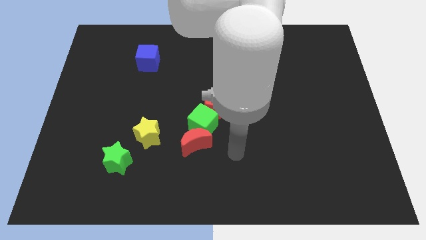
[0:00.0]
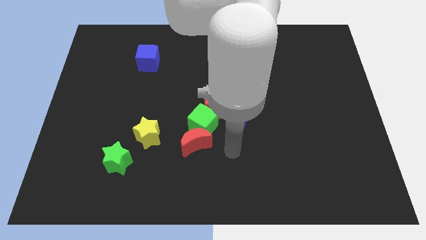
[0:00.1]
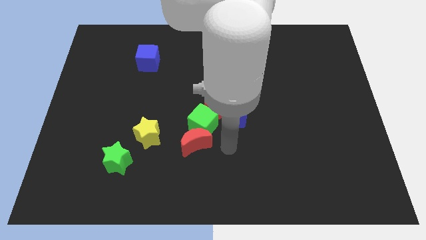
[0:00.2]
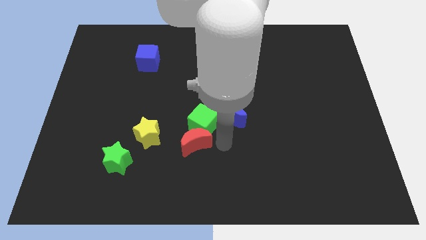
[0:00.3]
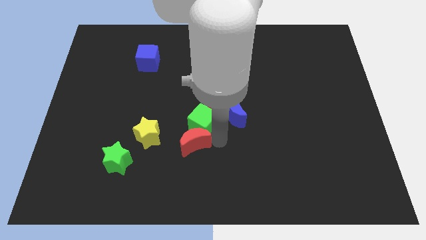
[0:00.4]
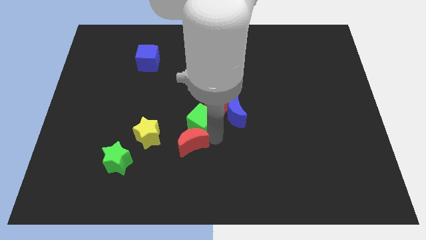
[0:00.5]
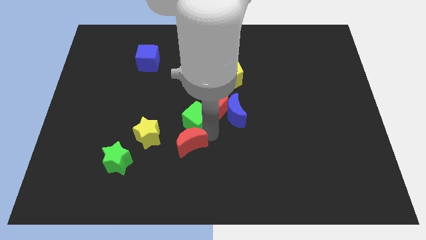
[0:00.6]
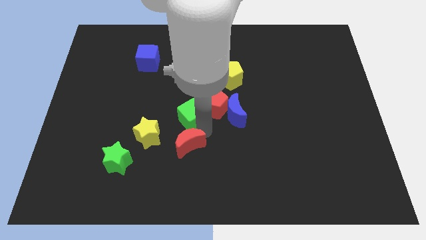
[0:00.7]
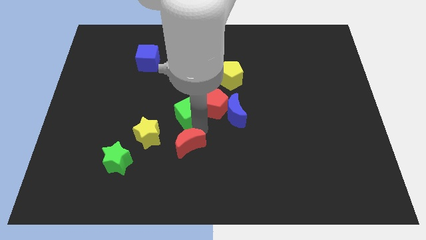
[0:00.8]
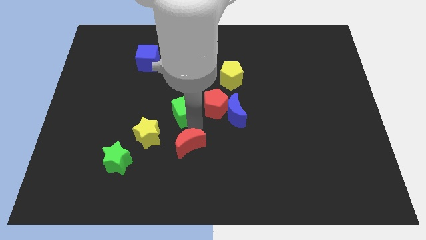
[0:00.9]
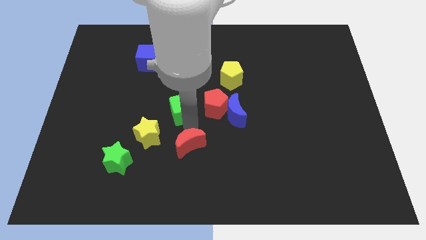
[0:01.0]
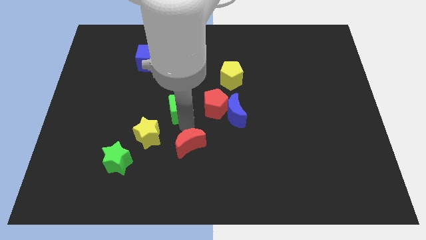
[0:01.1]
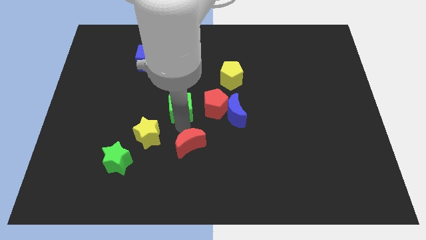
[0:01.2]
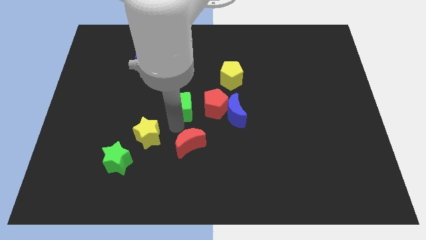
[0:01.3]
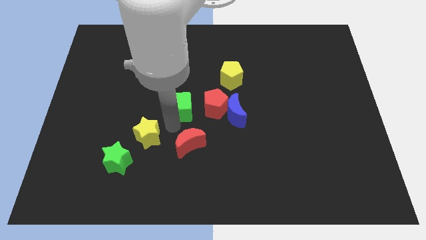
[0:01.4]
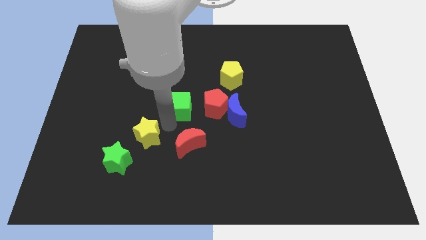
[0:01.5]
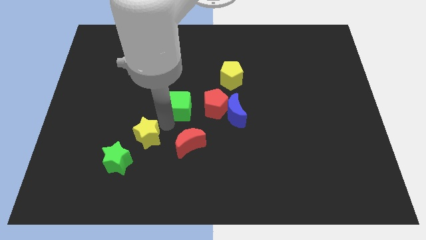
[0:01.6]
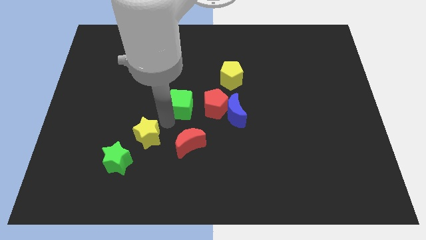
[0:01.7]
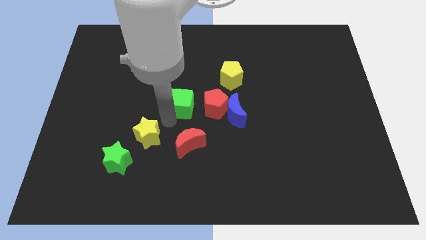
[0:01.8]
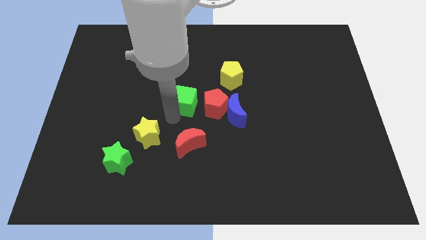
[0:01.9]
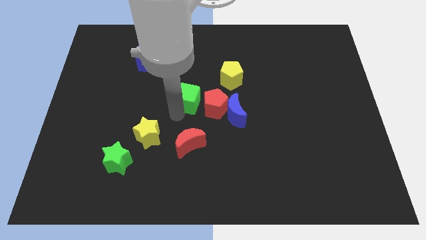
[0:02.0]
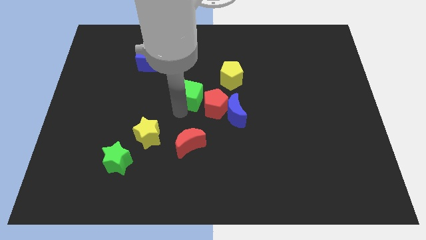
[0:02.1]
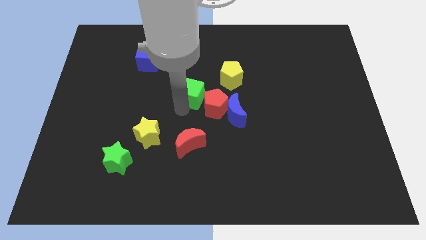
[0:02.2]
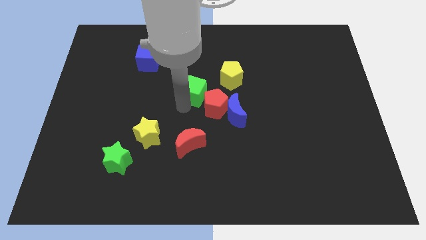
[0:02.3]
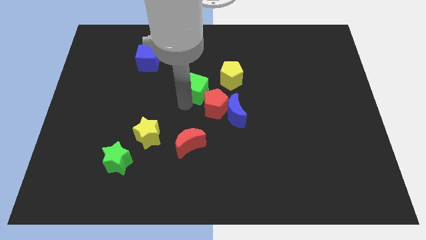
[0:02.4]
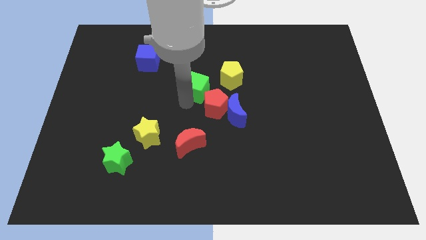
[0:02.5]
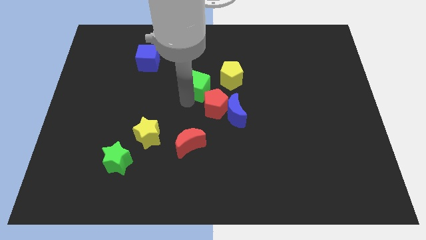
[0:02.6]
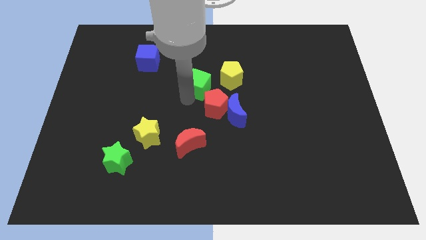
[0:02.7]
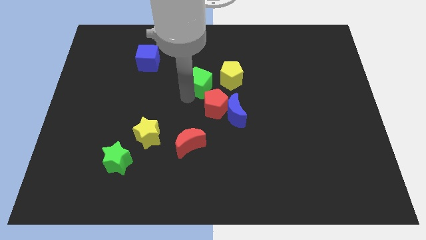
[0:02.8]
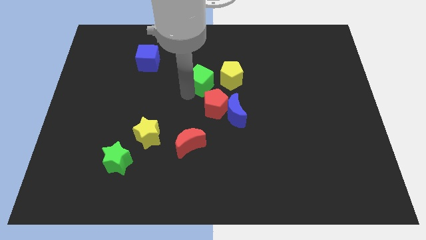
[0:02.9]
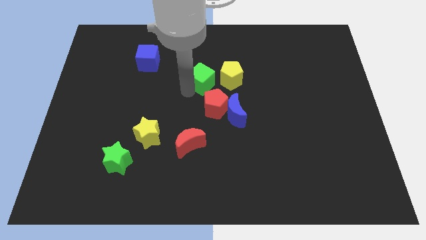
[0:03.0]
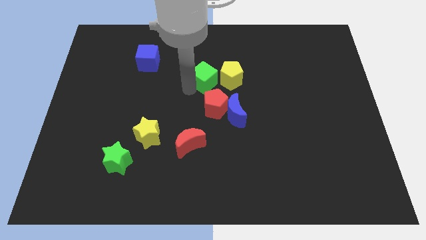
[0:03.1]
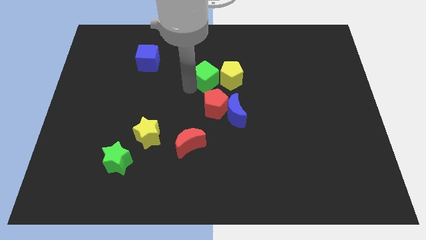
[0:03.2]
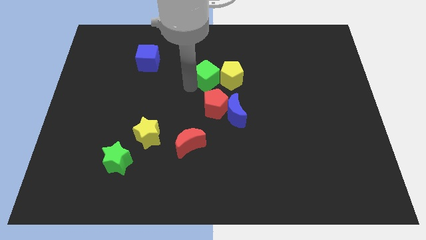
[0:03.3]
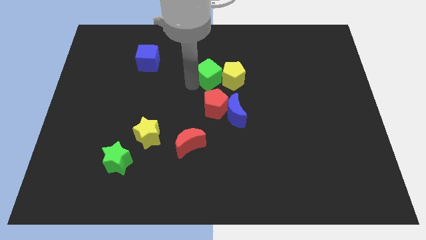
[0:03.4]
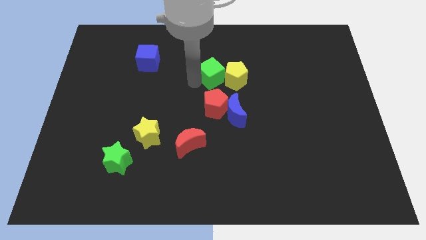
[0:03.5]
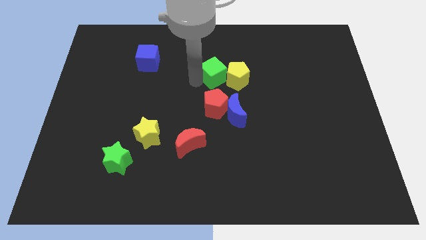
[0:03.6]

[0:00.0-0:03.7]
put the green cube towards the yellow pentagon

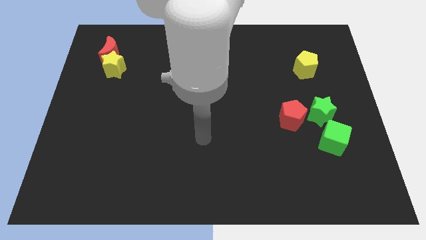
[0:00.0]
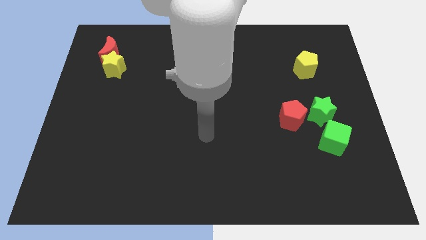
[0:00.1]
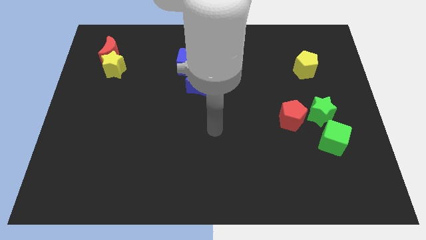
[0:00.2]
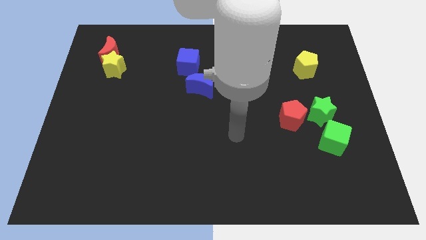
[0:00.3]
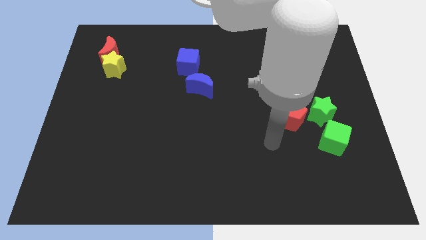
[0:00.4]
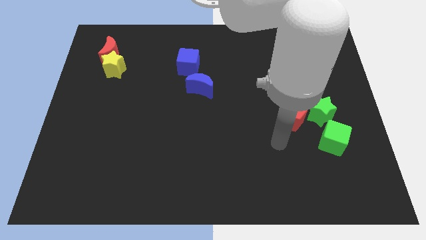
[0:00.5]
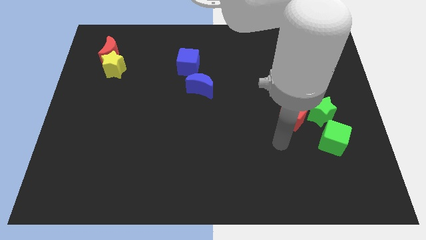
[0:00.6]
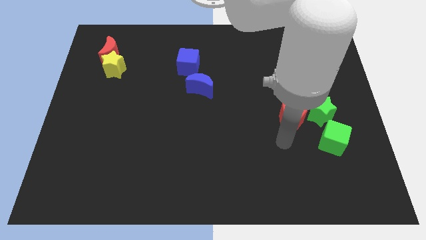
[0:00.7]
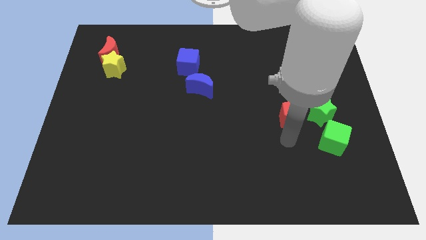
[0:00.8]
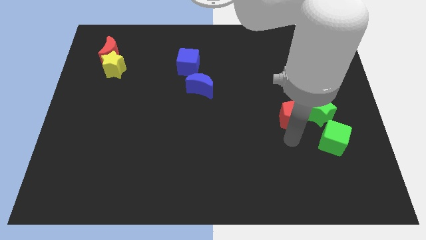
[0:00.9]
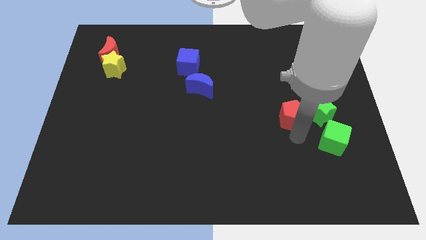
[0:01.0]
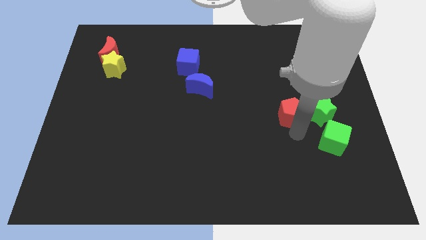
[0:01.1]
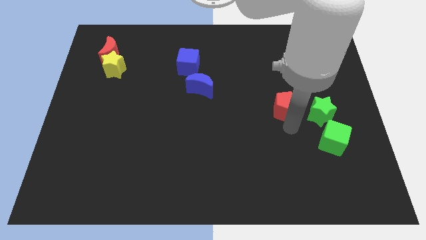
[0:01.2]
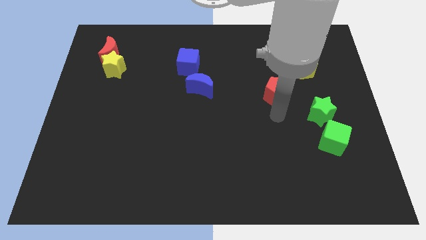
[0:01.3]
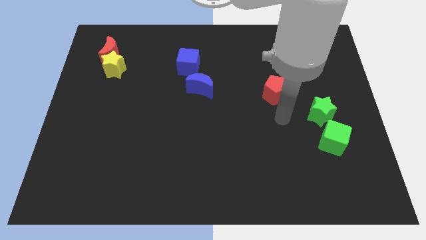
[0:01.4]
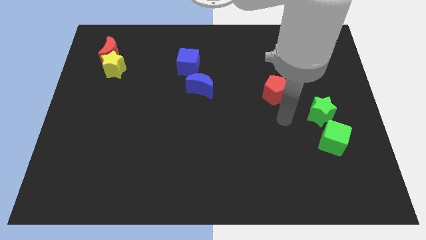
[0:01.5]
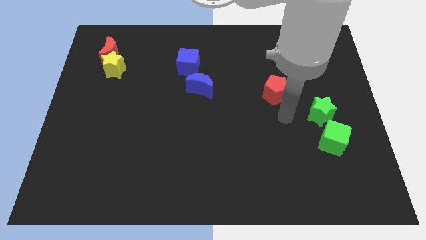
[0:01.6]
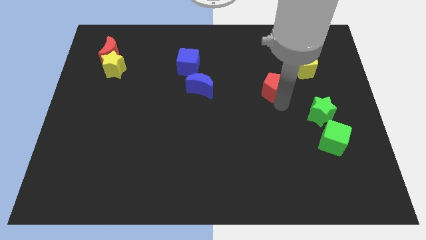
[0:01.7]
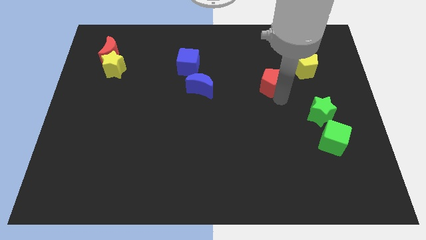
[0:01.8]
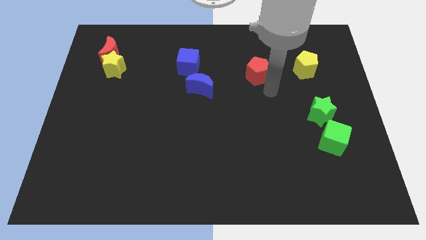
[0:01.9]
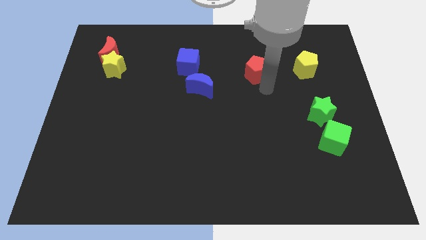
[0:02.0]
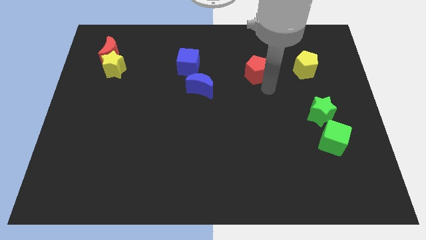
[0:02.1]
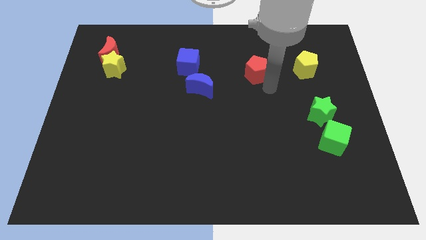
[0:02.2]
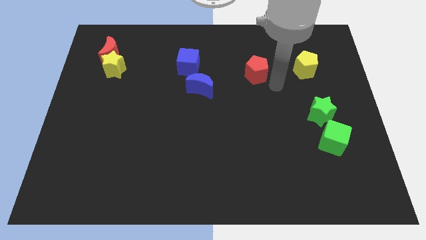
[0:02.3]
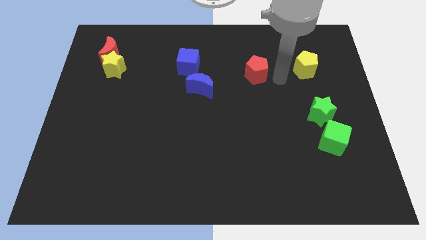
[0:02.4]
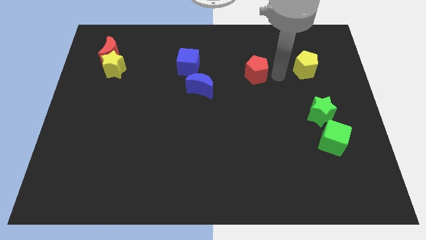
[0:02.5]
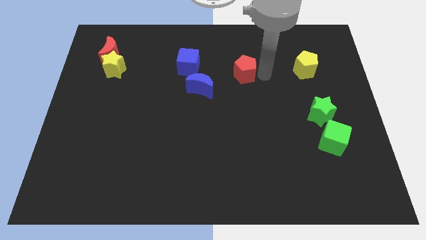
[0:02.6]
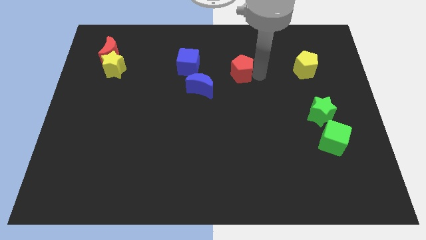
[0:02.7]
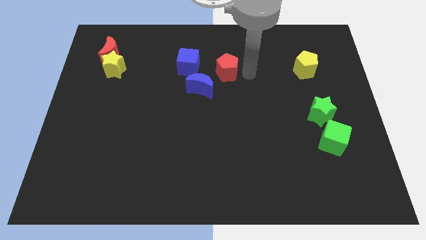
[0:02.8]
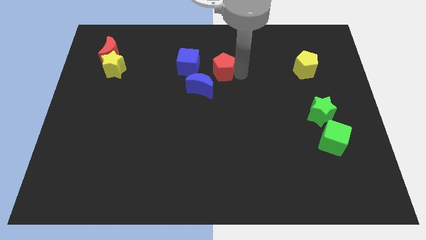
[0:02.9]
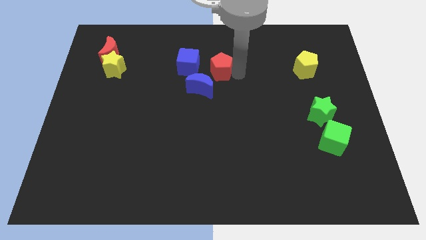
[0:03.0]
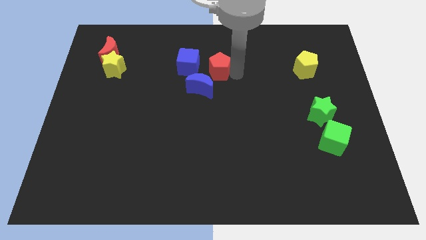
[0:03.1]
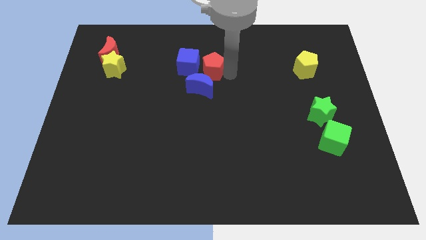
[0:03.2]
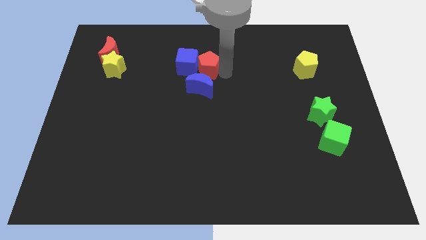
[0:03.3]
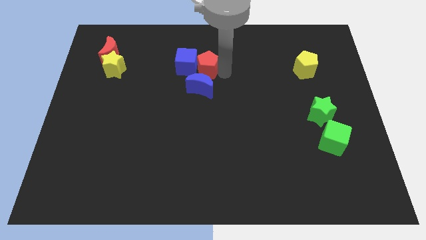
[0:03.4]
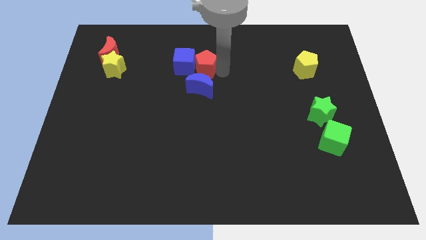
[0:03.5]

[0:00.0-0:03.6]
slide the red pentagon towards the blue cube

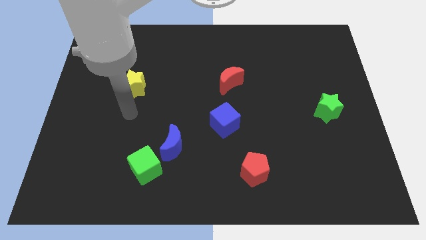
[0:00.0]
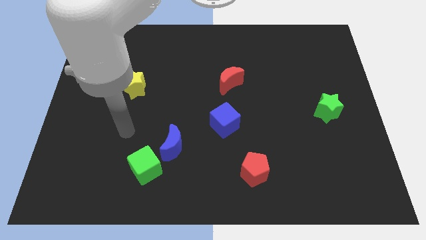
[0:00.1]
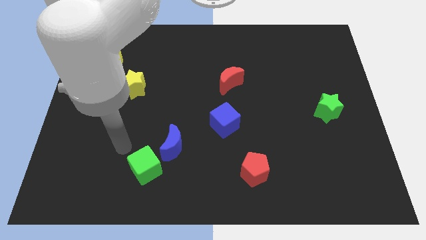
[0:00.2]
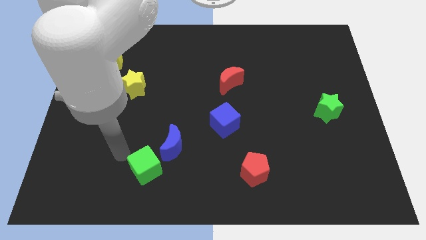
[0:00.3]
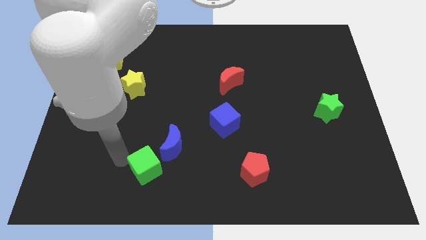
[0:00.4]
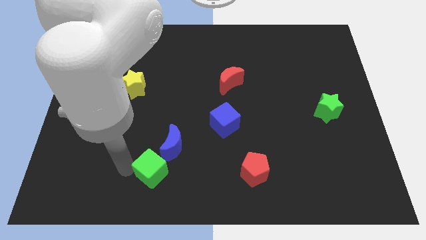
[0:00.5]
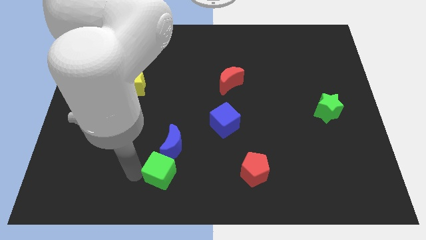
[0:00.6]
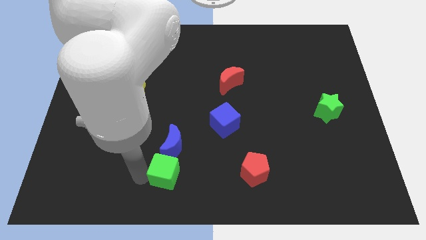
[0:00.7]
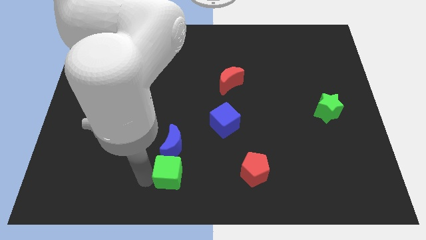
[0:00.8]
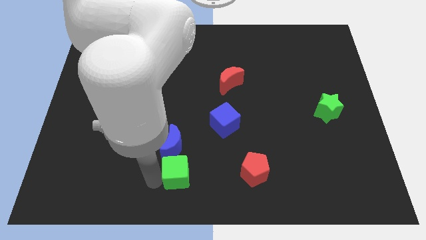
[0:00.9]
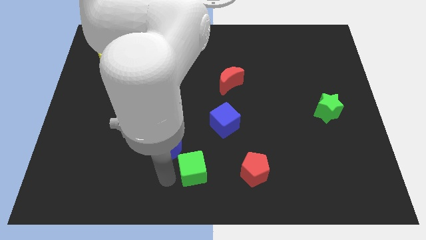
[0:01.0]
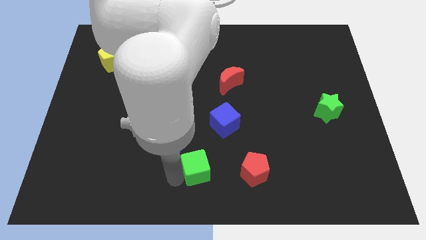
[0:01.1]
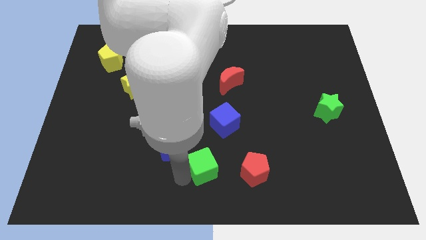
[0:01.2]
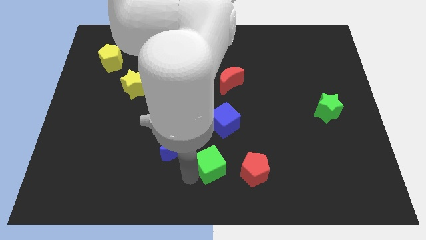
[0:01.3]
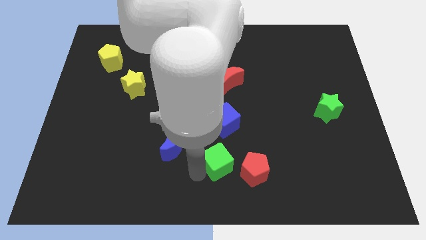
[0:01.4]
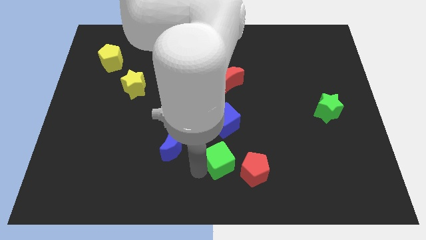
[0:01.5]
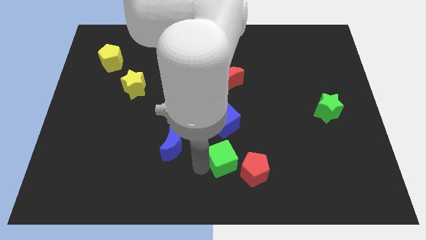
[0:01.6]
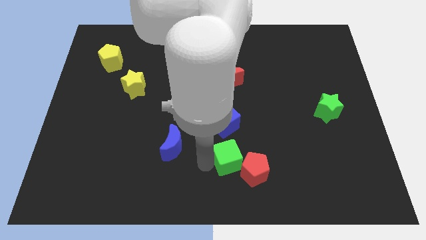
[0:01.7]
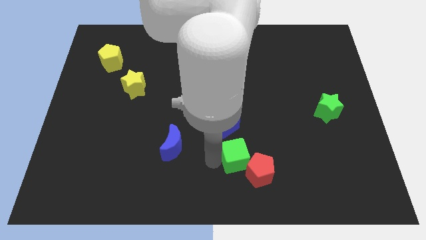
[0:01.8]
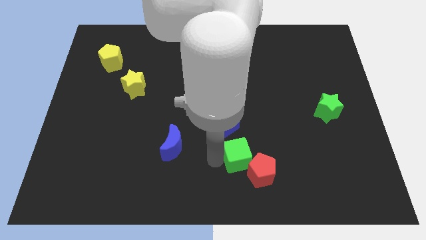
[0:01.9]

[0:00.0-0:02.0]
put the green cube towards the red pentagon
